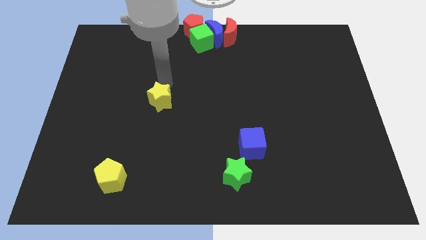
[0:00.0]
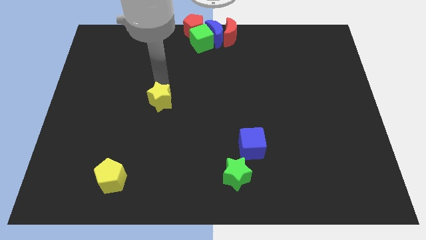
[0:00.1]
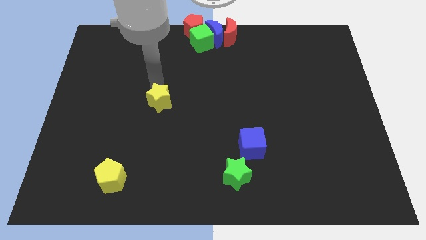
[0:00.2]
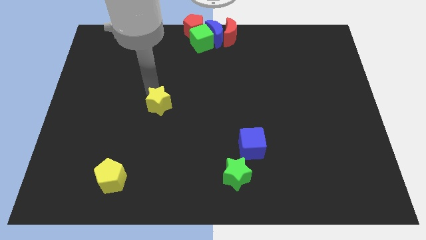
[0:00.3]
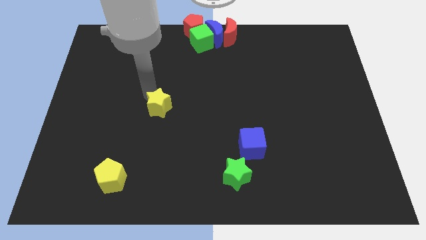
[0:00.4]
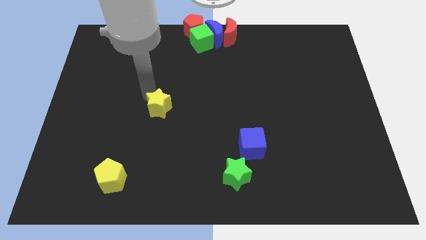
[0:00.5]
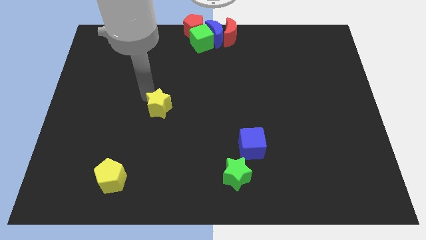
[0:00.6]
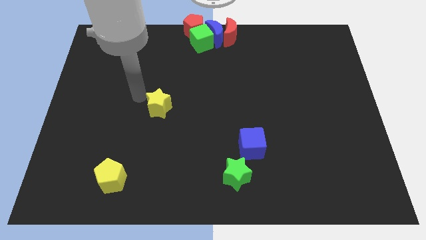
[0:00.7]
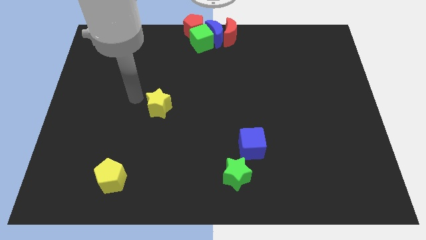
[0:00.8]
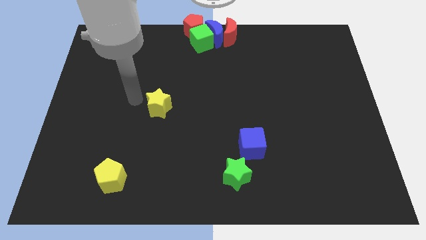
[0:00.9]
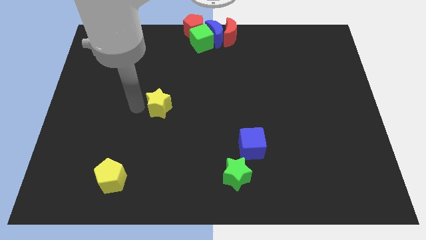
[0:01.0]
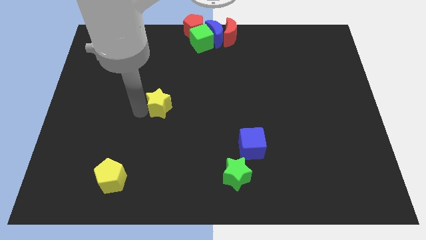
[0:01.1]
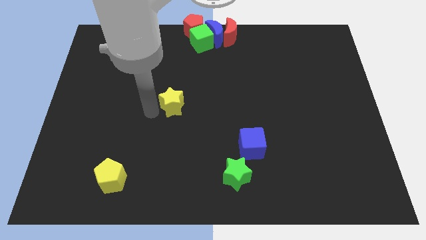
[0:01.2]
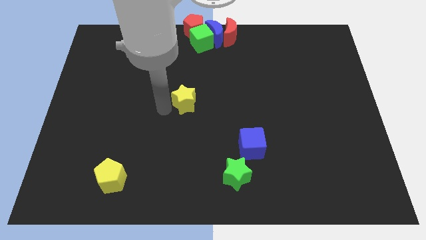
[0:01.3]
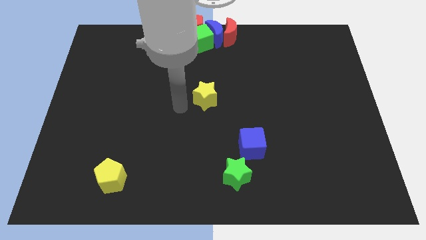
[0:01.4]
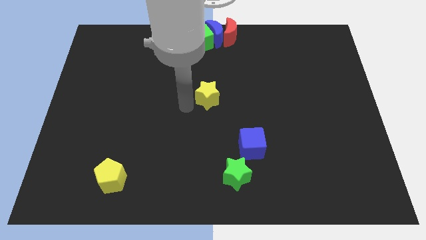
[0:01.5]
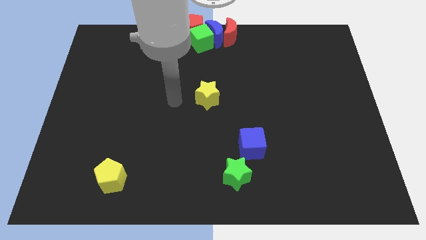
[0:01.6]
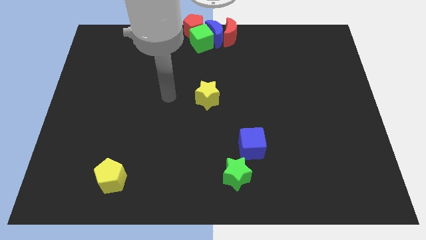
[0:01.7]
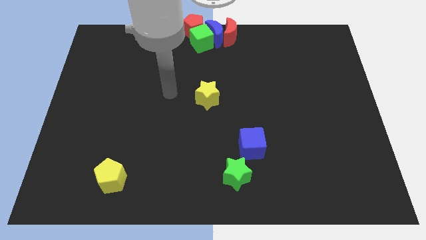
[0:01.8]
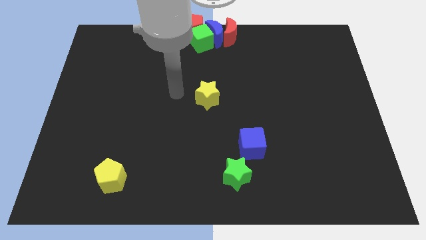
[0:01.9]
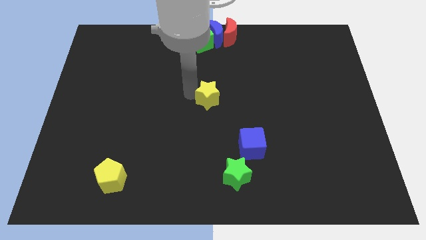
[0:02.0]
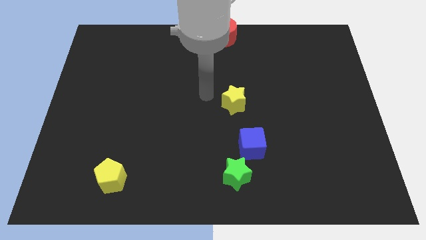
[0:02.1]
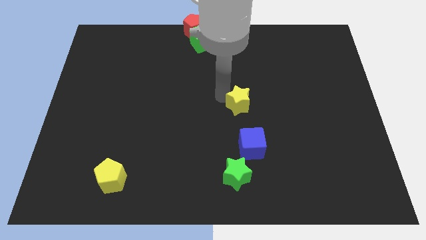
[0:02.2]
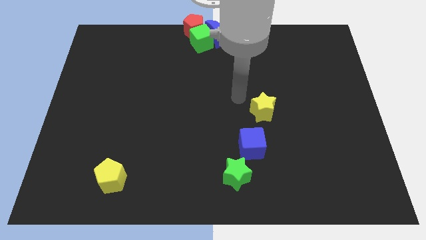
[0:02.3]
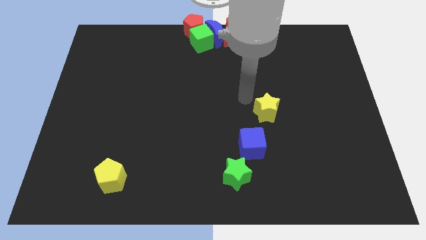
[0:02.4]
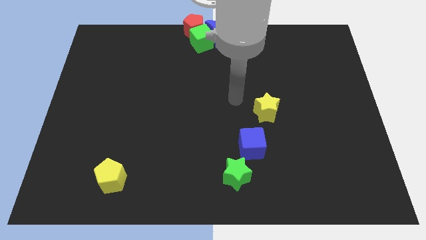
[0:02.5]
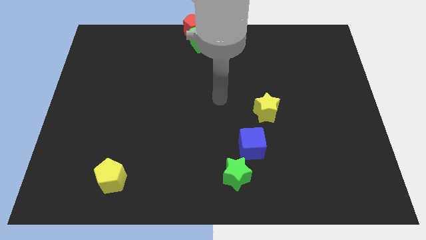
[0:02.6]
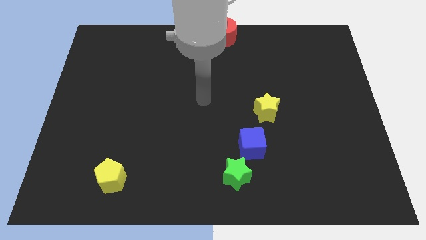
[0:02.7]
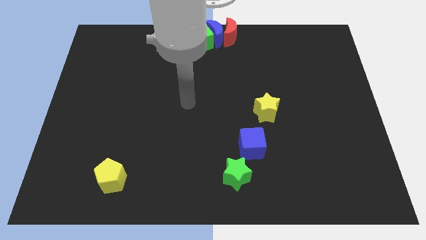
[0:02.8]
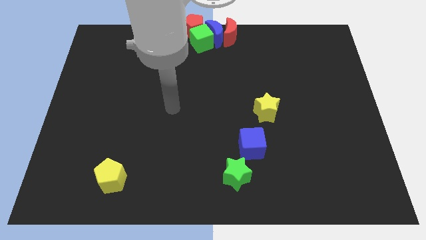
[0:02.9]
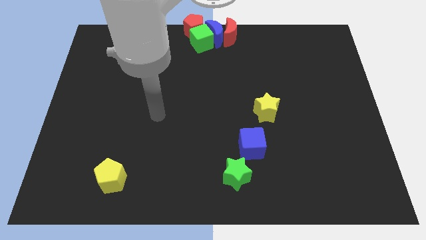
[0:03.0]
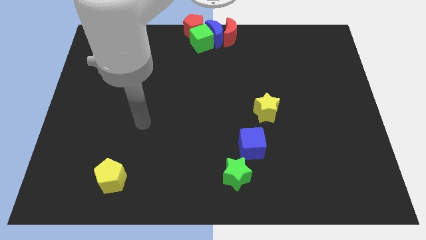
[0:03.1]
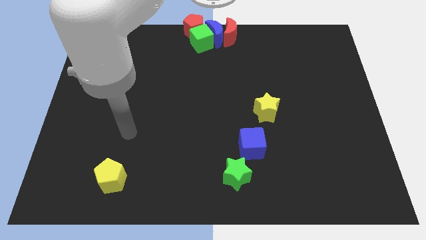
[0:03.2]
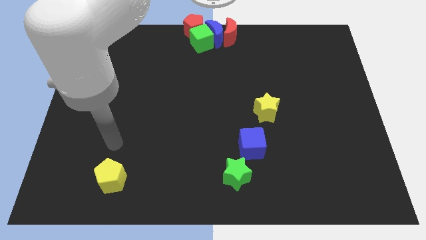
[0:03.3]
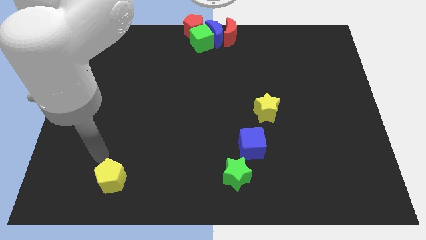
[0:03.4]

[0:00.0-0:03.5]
drag the yellow star to the right side of the board

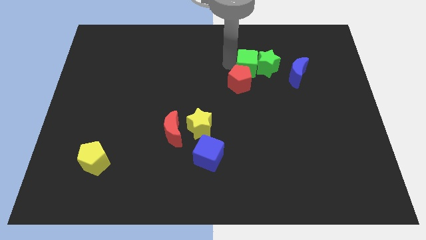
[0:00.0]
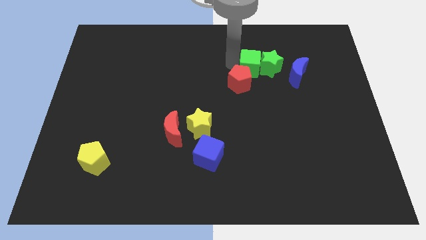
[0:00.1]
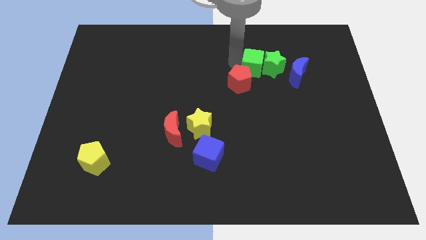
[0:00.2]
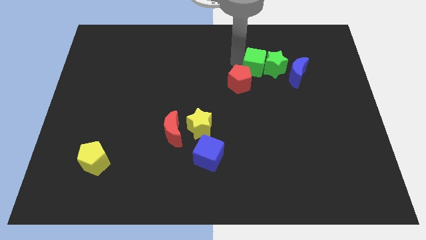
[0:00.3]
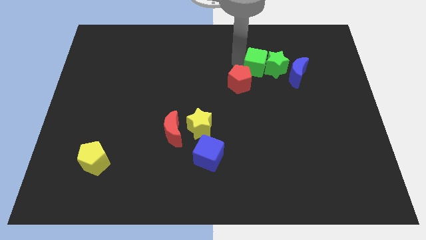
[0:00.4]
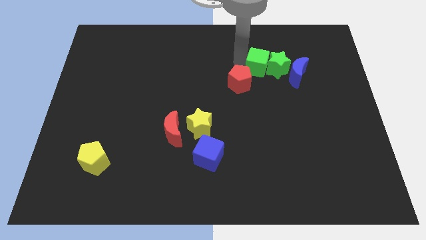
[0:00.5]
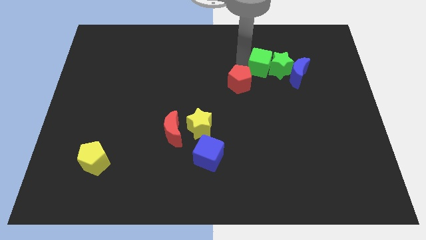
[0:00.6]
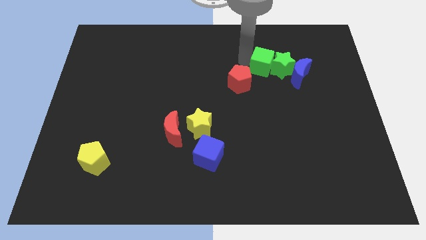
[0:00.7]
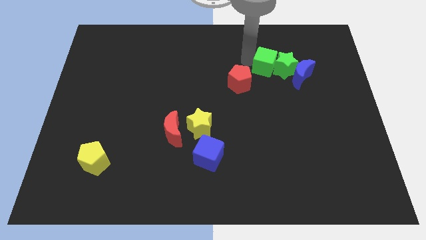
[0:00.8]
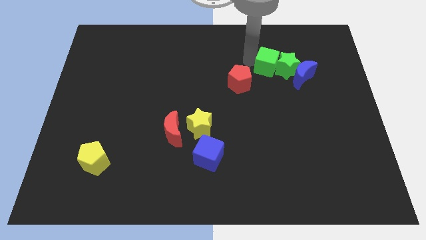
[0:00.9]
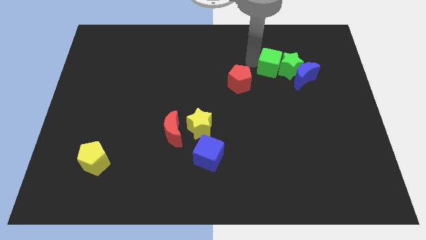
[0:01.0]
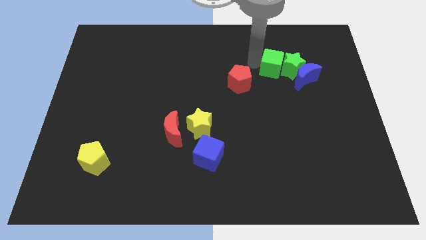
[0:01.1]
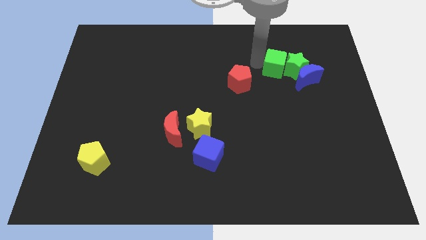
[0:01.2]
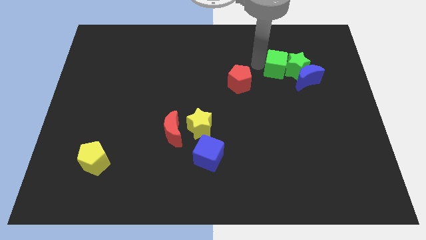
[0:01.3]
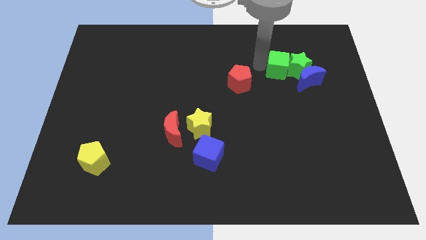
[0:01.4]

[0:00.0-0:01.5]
push the green blocks into the blue crescent

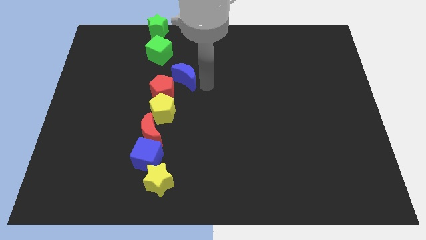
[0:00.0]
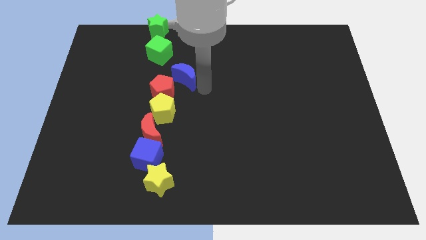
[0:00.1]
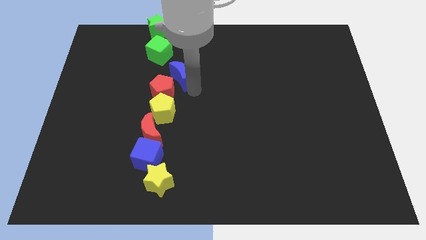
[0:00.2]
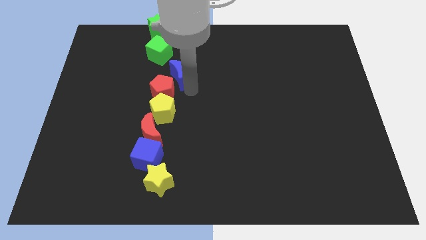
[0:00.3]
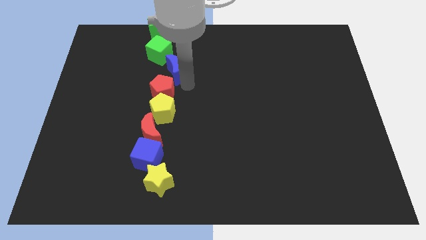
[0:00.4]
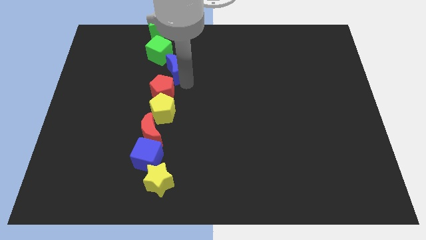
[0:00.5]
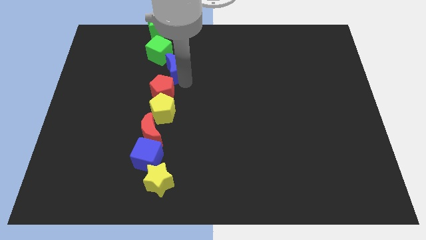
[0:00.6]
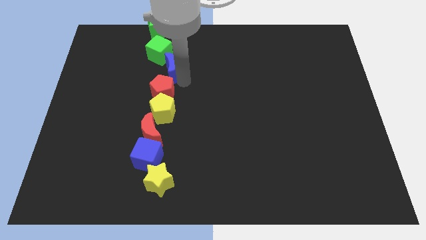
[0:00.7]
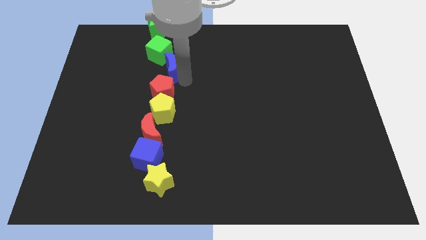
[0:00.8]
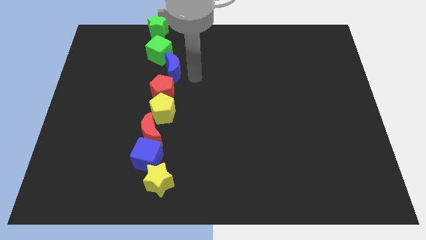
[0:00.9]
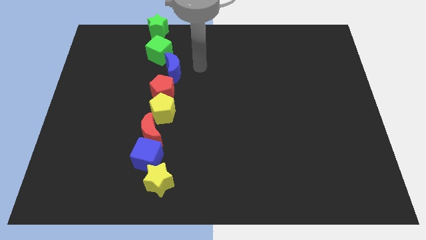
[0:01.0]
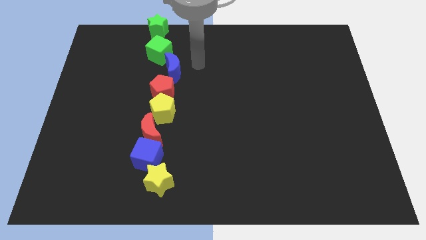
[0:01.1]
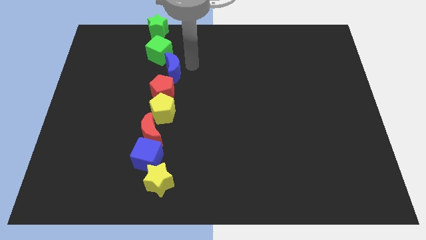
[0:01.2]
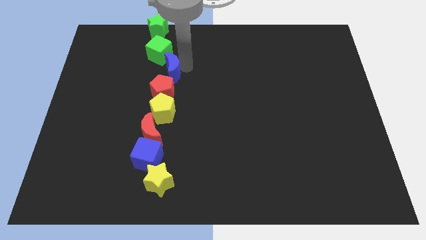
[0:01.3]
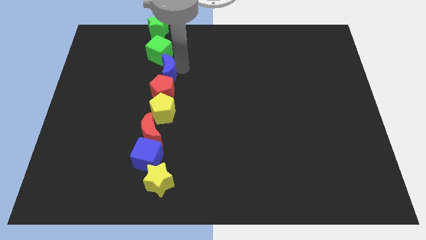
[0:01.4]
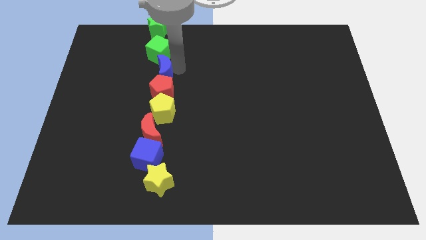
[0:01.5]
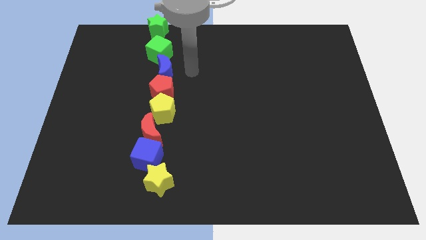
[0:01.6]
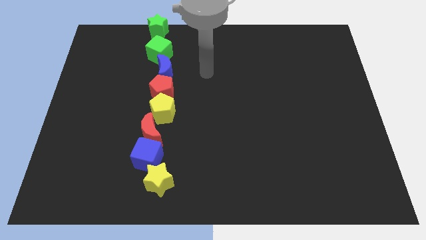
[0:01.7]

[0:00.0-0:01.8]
place the blue moon vertically above the red pentagon

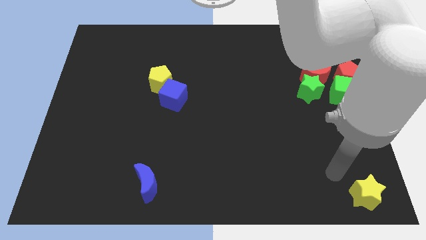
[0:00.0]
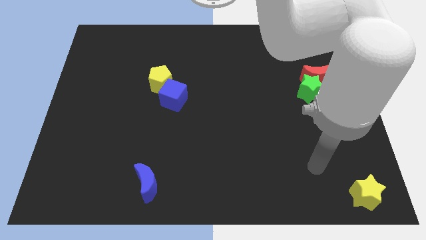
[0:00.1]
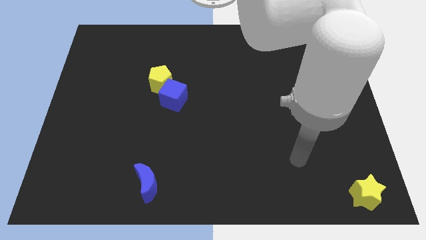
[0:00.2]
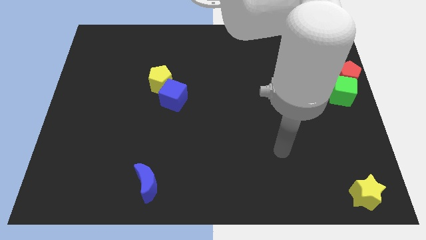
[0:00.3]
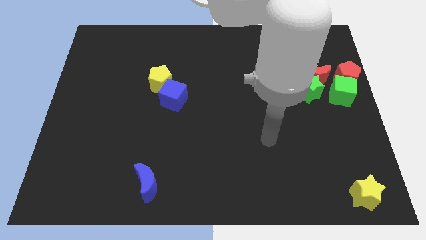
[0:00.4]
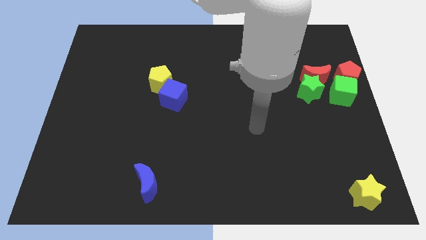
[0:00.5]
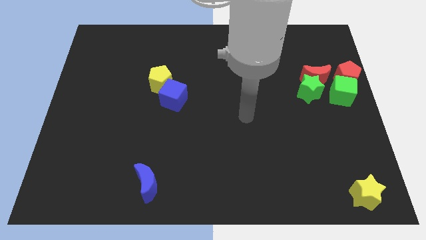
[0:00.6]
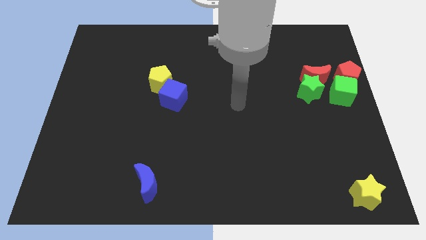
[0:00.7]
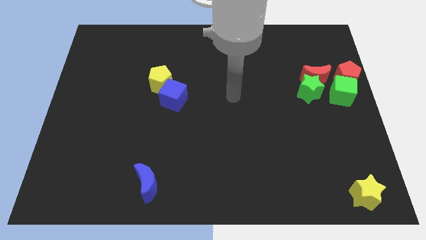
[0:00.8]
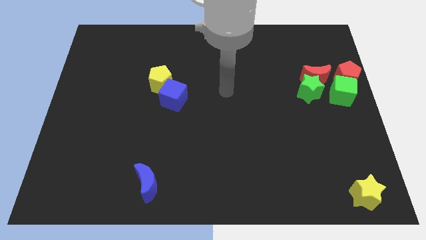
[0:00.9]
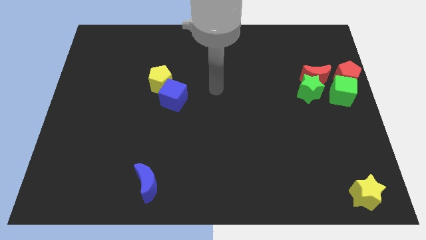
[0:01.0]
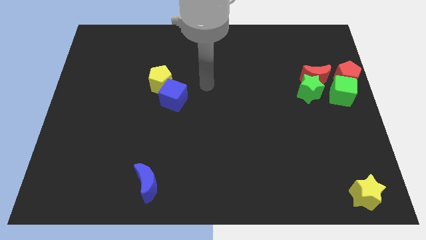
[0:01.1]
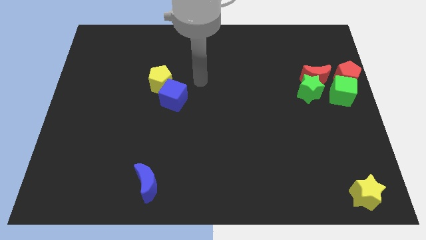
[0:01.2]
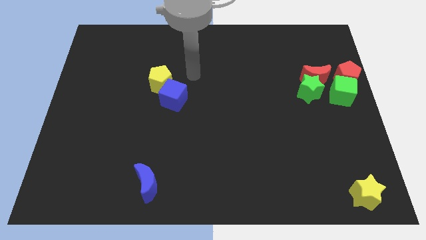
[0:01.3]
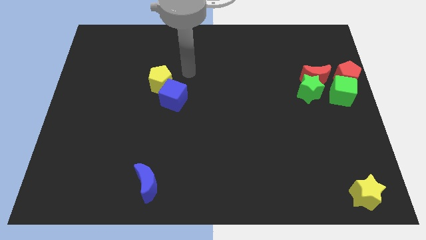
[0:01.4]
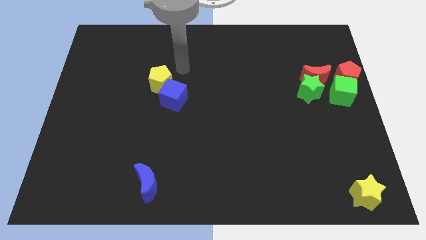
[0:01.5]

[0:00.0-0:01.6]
move your arm away from the yellow star

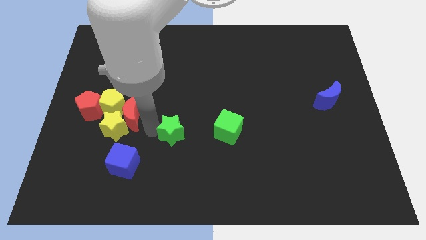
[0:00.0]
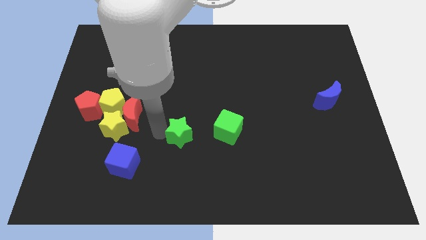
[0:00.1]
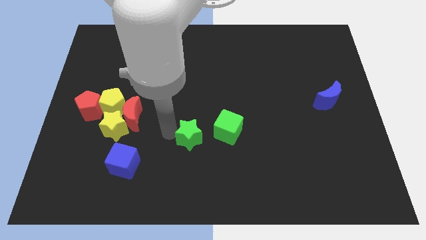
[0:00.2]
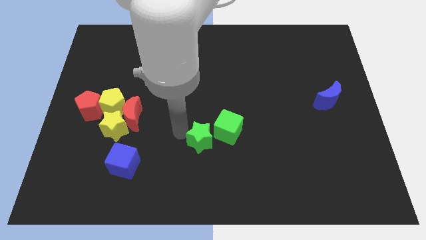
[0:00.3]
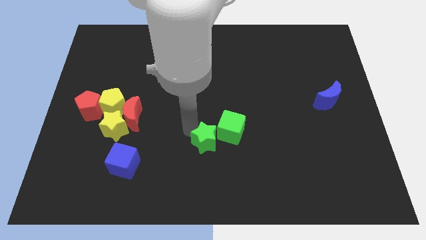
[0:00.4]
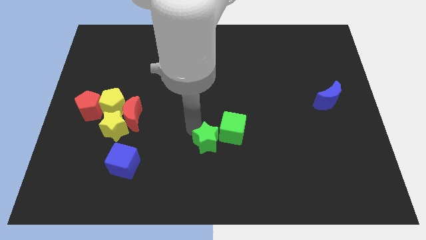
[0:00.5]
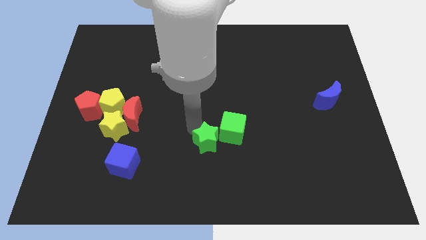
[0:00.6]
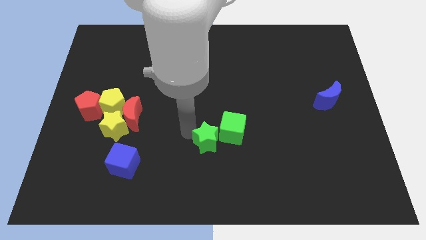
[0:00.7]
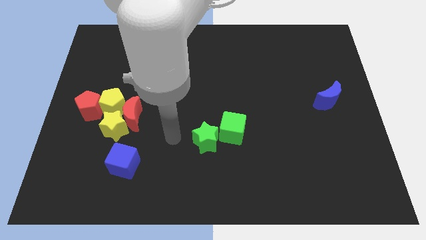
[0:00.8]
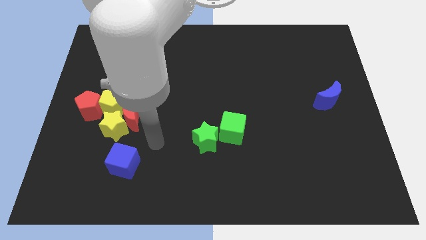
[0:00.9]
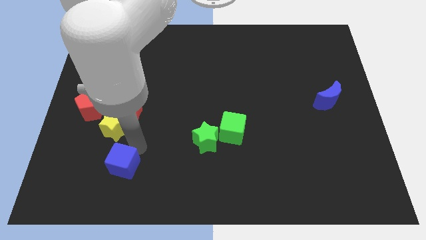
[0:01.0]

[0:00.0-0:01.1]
place the green star at the bottom left side of green cube
